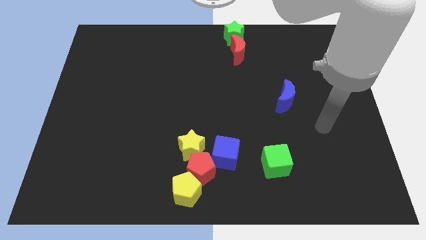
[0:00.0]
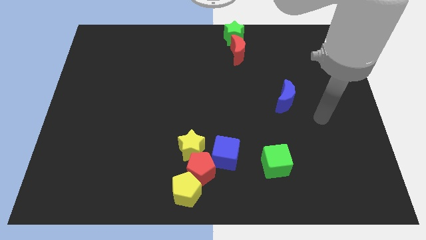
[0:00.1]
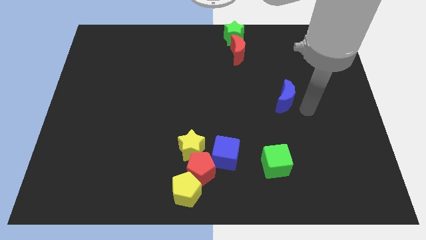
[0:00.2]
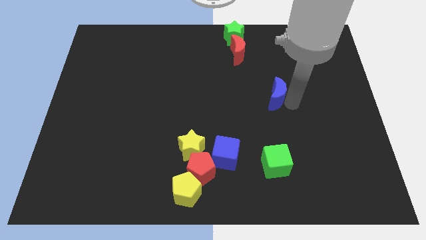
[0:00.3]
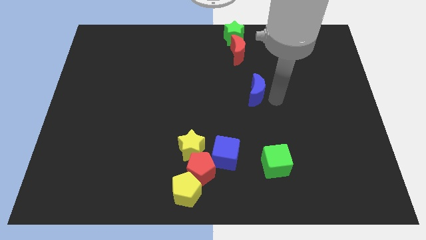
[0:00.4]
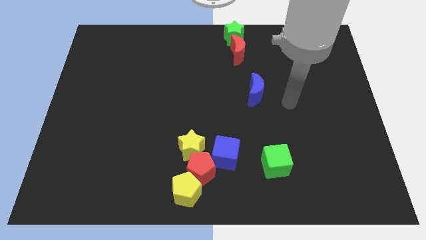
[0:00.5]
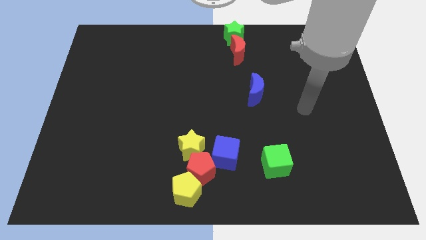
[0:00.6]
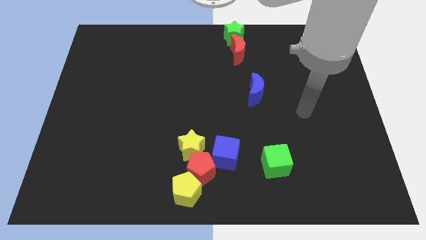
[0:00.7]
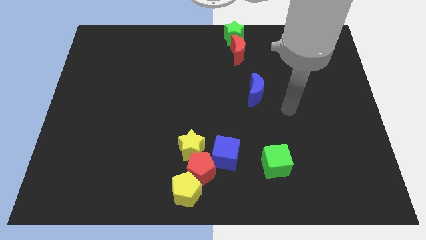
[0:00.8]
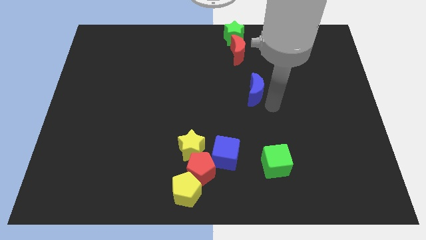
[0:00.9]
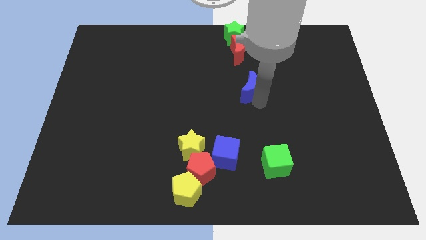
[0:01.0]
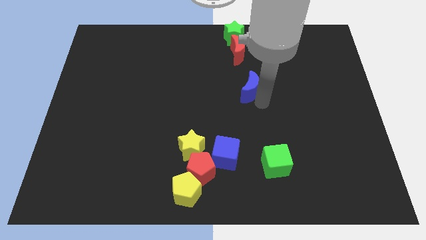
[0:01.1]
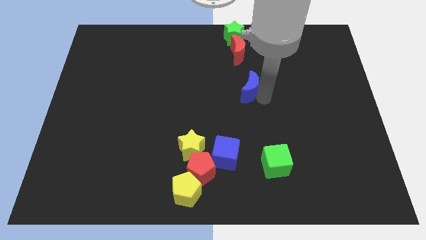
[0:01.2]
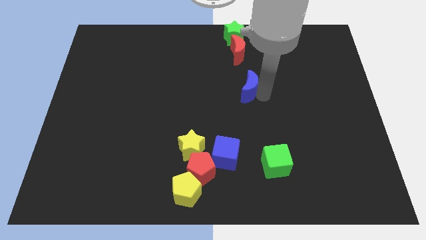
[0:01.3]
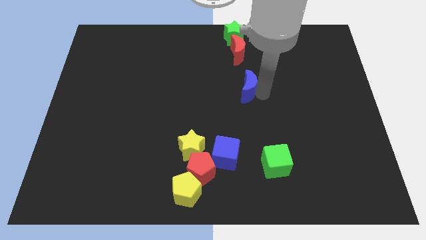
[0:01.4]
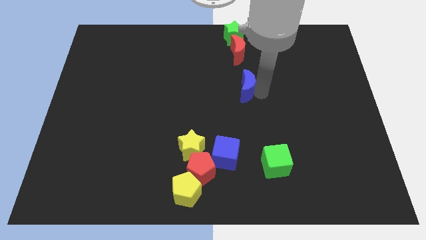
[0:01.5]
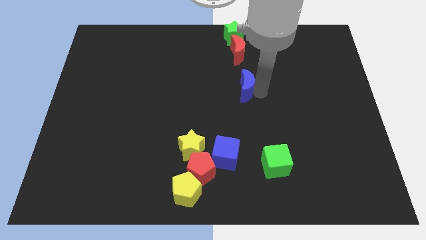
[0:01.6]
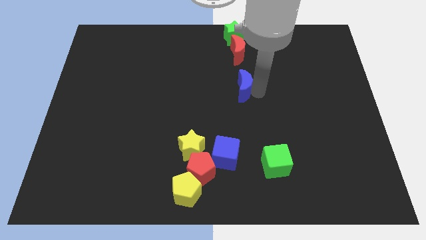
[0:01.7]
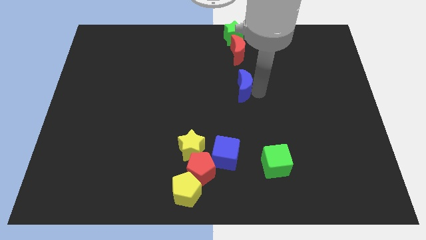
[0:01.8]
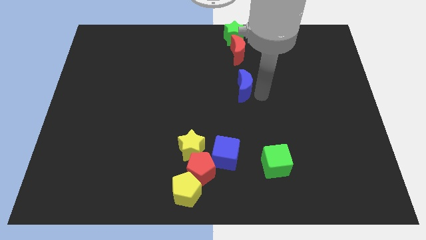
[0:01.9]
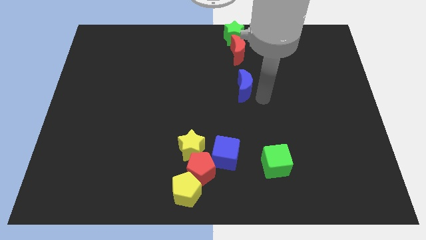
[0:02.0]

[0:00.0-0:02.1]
move the blue moon in the center

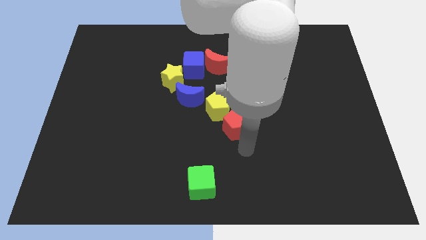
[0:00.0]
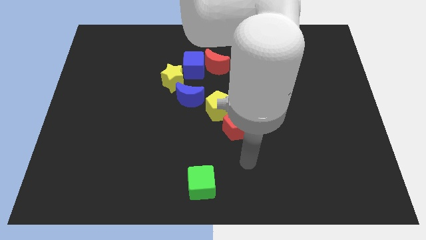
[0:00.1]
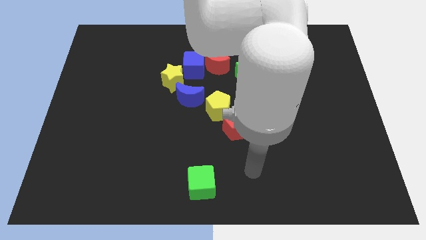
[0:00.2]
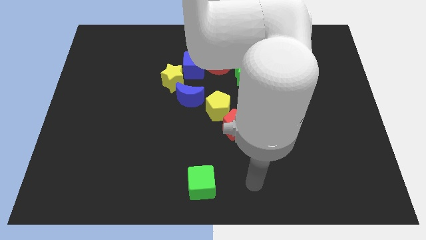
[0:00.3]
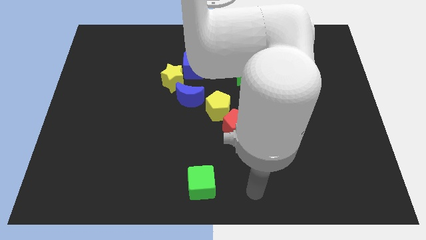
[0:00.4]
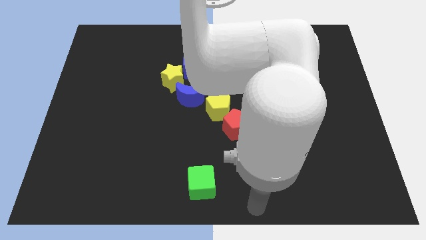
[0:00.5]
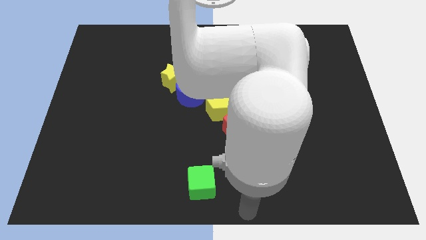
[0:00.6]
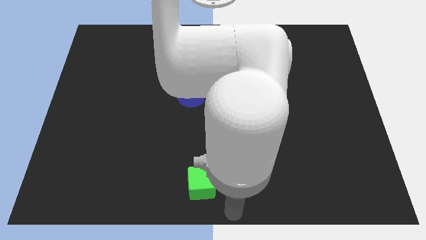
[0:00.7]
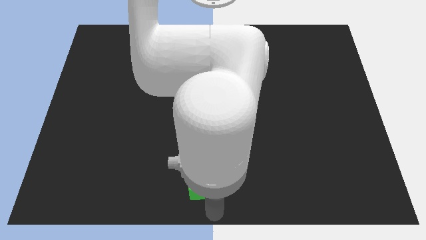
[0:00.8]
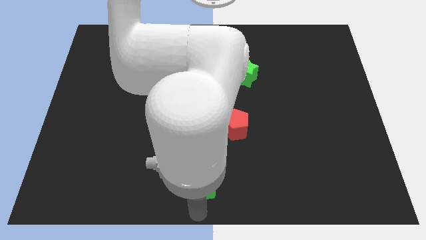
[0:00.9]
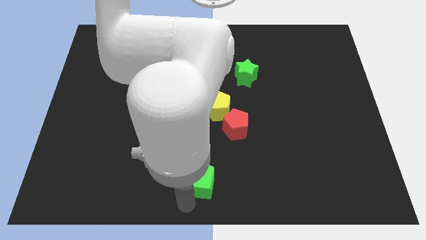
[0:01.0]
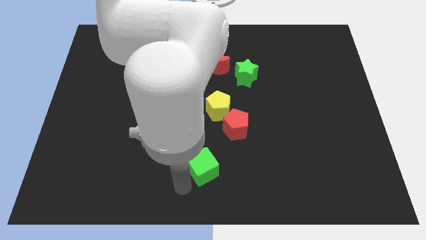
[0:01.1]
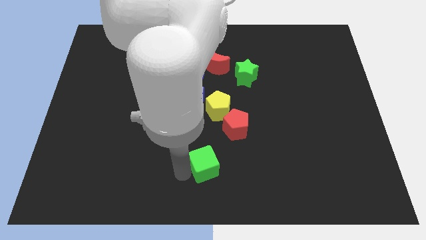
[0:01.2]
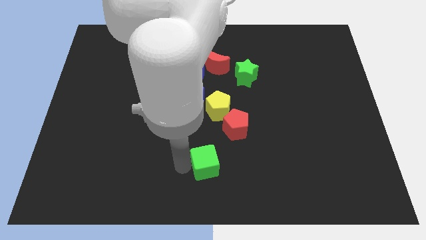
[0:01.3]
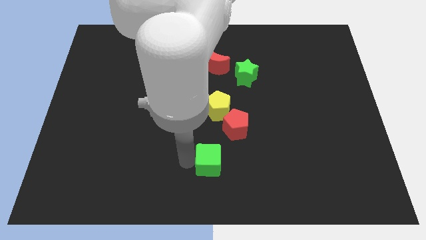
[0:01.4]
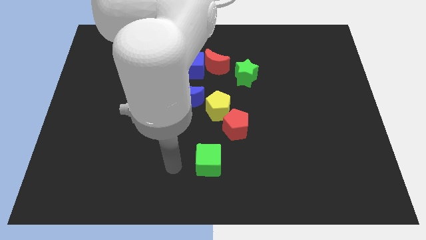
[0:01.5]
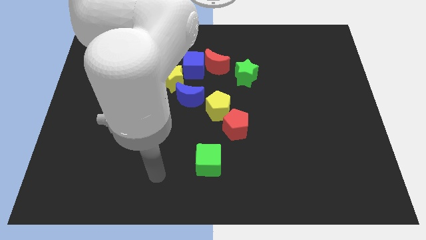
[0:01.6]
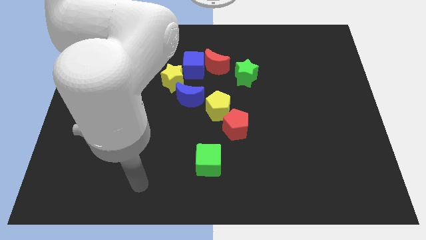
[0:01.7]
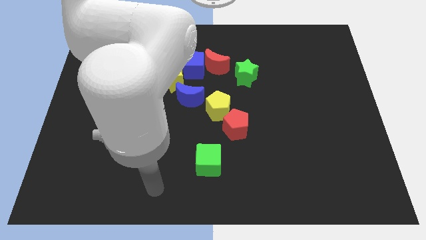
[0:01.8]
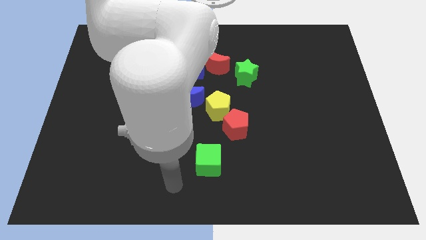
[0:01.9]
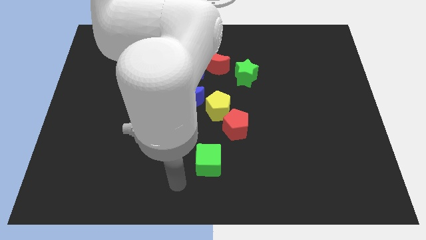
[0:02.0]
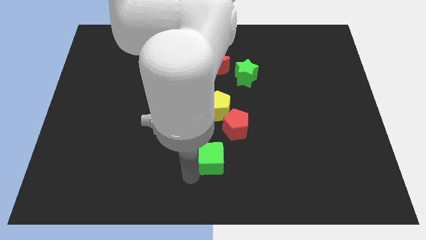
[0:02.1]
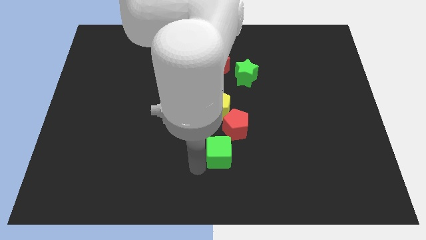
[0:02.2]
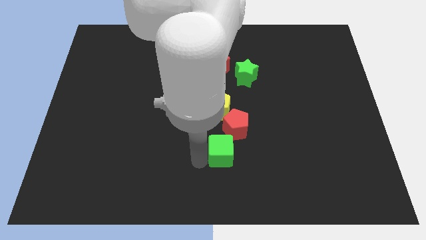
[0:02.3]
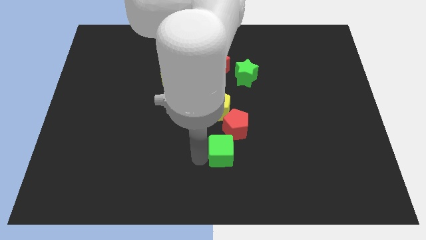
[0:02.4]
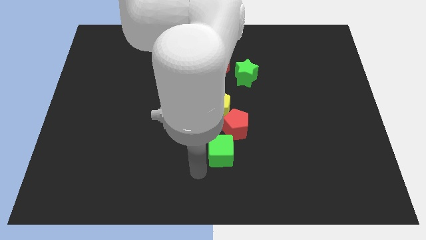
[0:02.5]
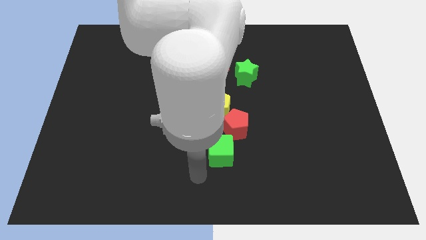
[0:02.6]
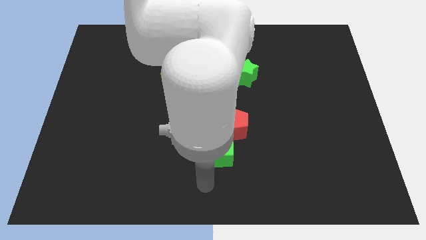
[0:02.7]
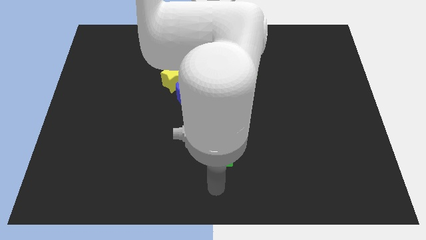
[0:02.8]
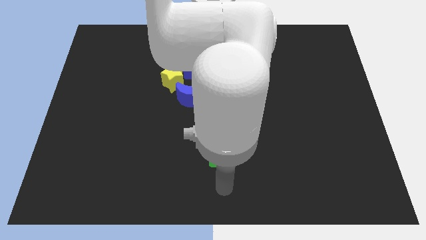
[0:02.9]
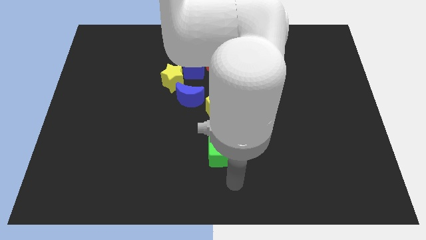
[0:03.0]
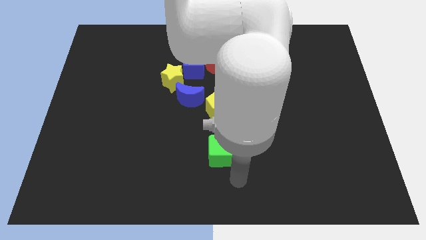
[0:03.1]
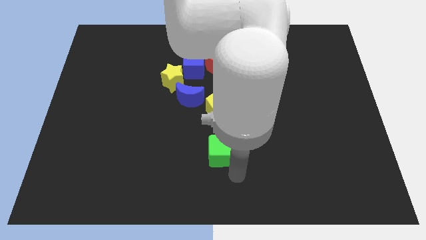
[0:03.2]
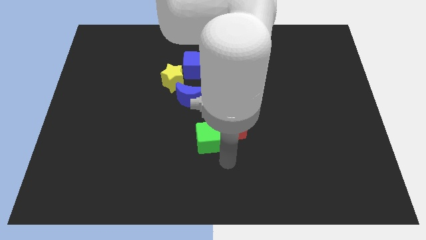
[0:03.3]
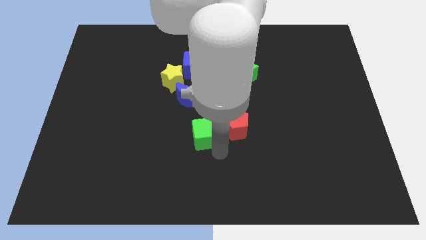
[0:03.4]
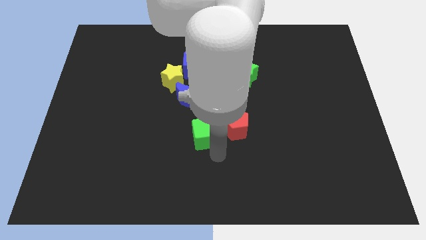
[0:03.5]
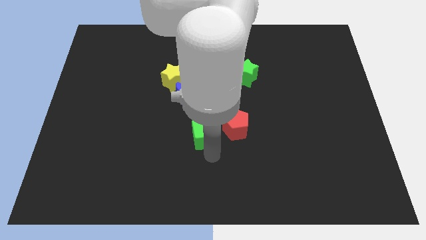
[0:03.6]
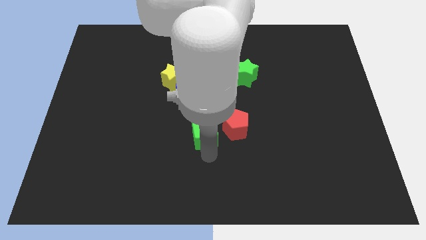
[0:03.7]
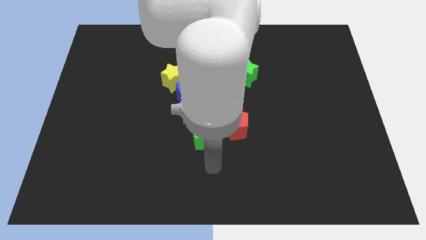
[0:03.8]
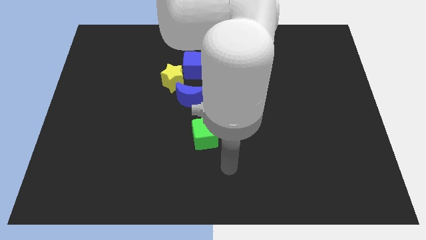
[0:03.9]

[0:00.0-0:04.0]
push the green cube towards the left of the red pentagon

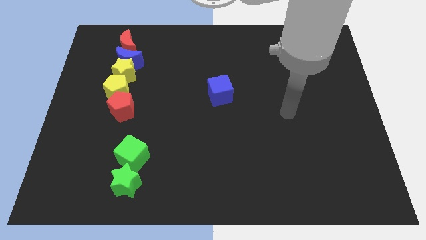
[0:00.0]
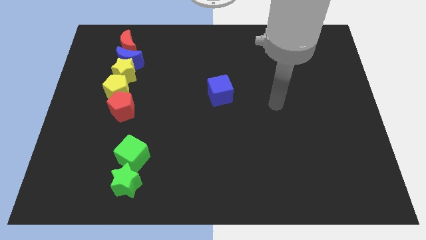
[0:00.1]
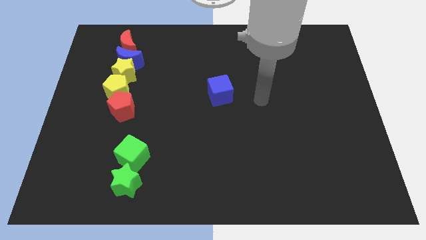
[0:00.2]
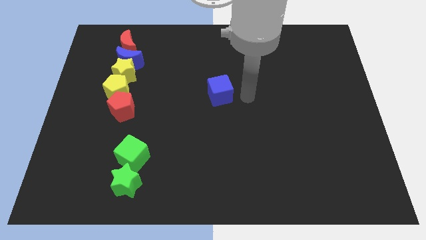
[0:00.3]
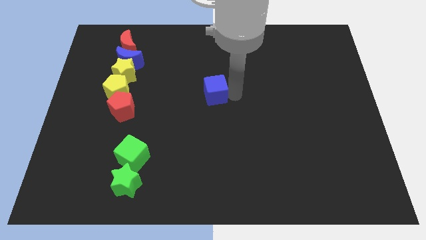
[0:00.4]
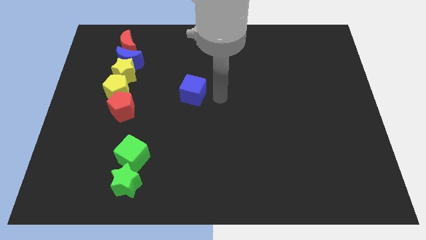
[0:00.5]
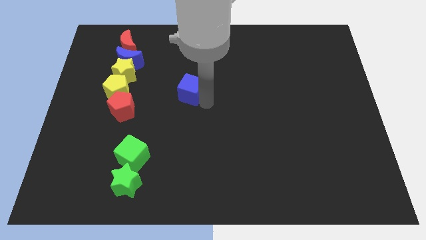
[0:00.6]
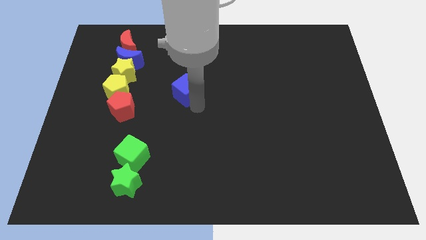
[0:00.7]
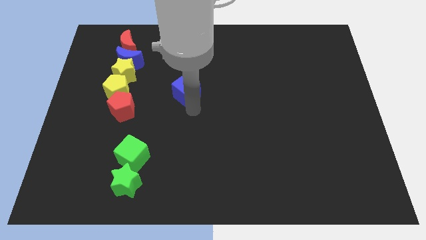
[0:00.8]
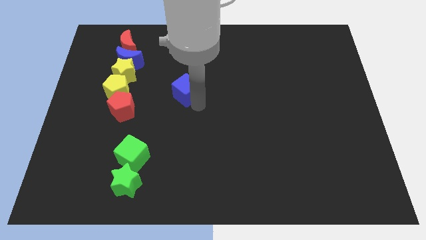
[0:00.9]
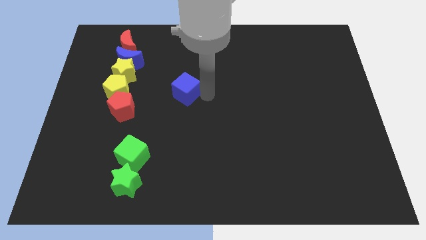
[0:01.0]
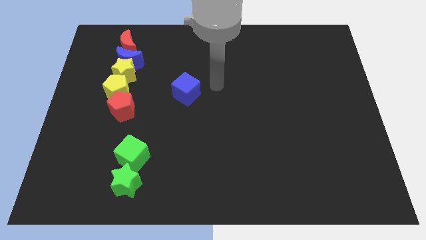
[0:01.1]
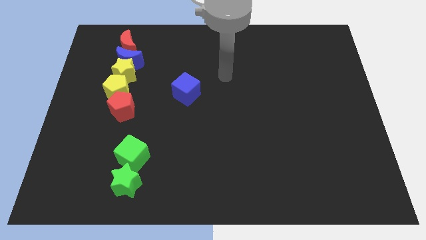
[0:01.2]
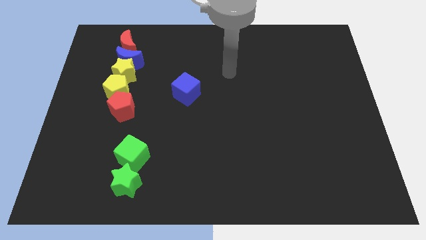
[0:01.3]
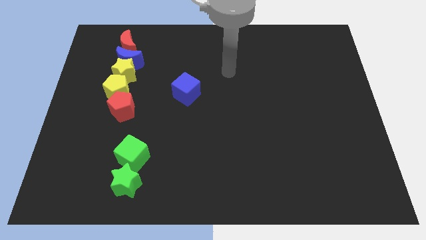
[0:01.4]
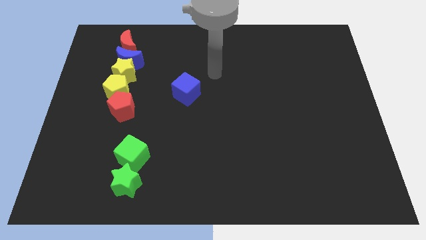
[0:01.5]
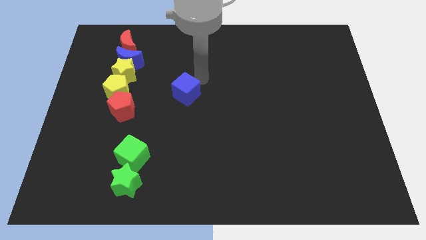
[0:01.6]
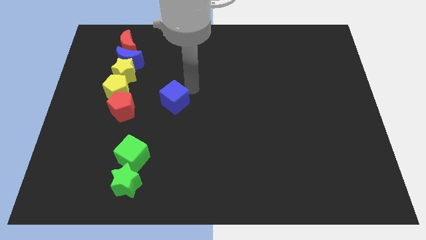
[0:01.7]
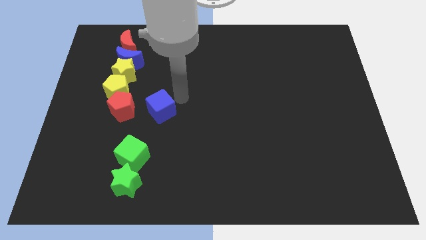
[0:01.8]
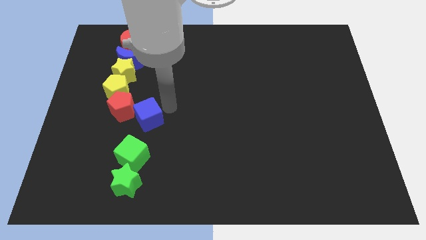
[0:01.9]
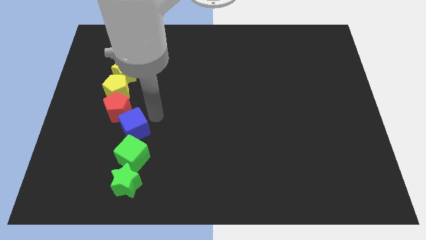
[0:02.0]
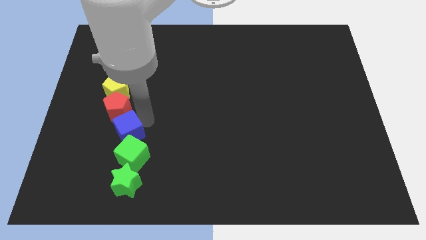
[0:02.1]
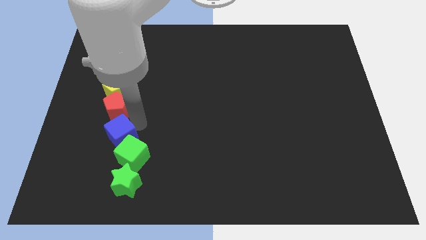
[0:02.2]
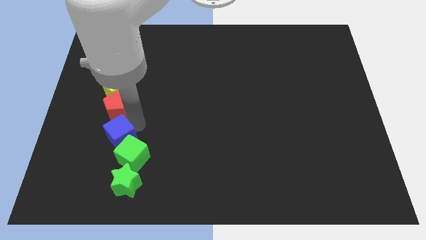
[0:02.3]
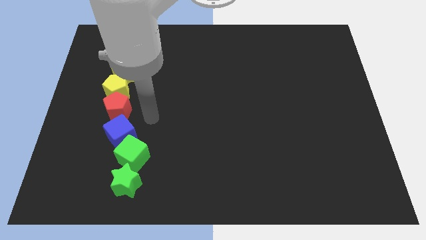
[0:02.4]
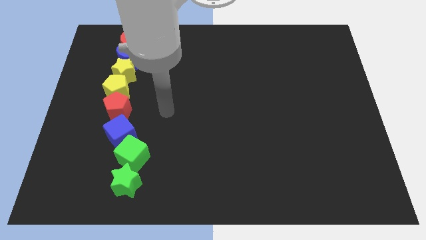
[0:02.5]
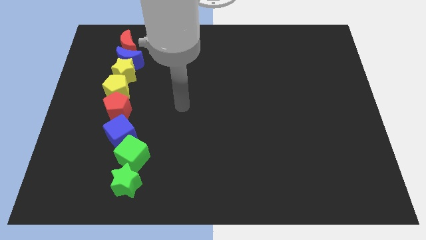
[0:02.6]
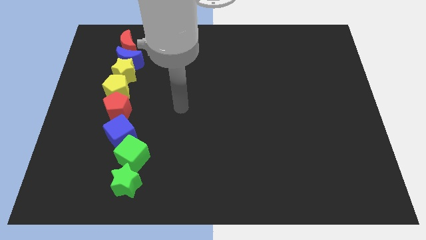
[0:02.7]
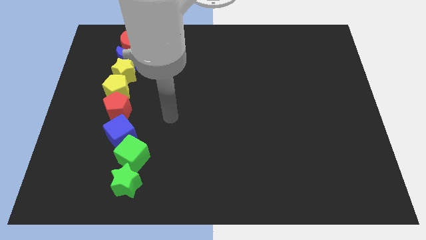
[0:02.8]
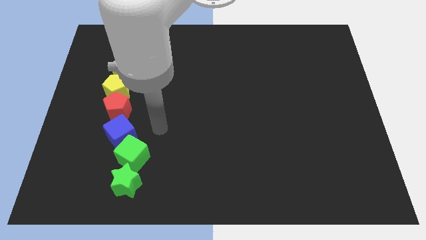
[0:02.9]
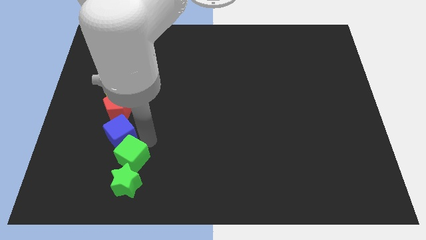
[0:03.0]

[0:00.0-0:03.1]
place the blue cube between the red pentagon and green cube
